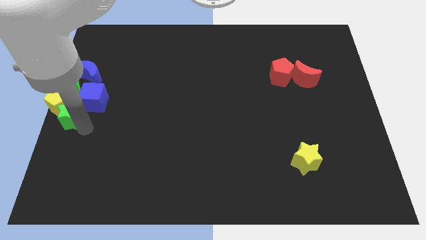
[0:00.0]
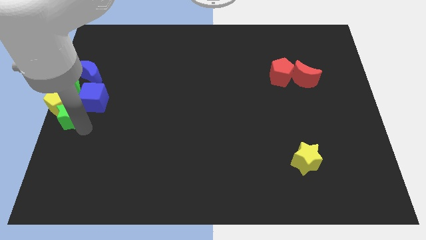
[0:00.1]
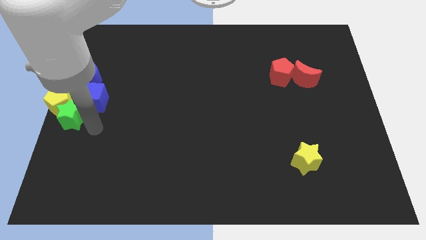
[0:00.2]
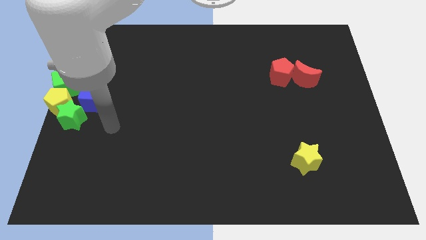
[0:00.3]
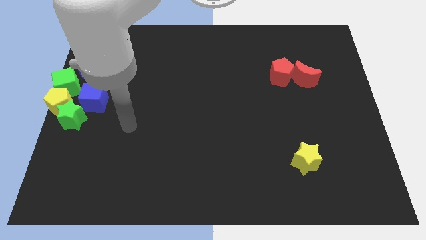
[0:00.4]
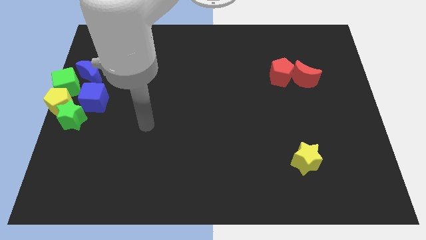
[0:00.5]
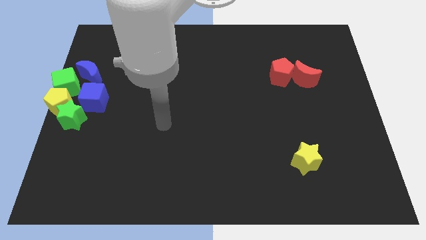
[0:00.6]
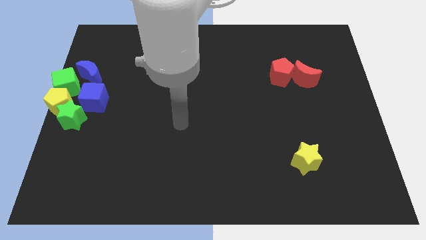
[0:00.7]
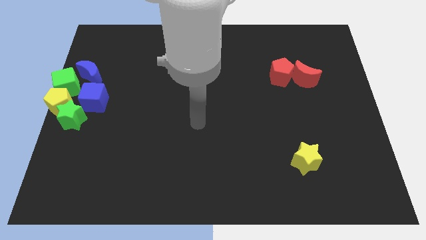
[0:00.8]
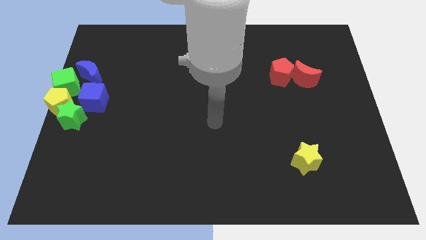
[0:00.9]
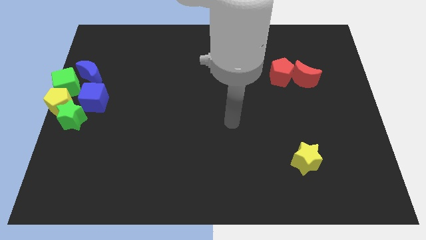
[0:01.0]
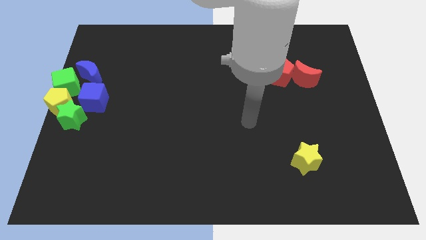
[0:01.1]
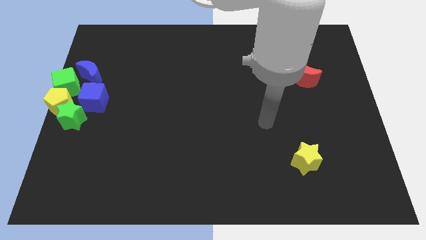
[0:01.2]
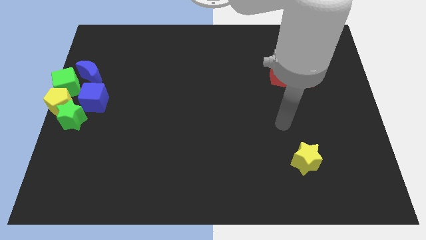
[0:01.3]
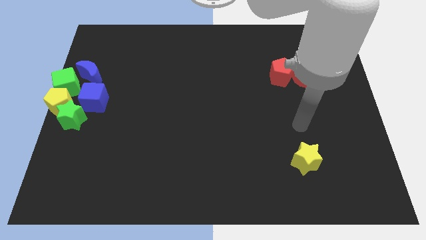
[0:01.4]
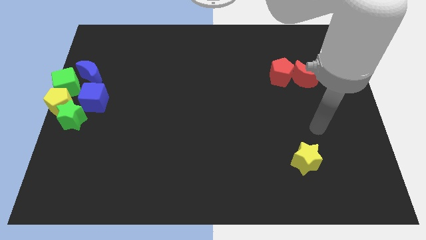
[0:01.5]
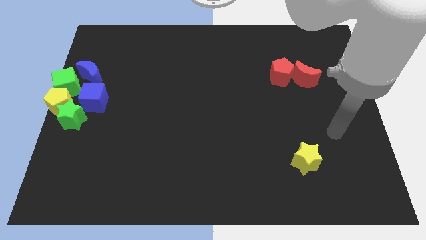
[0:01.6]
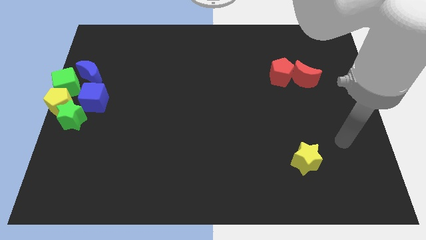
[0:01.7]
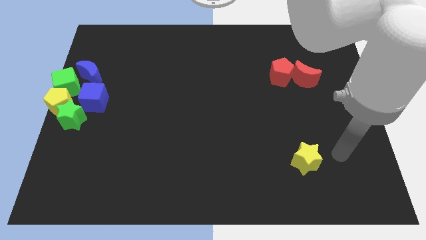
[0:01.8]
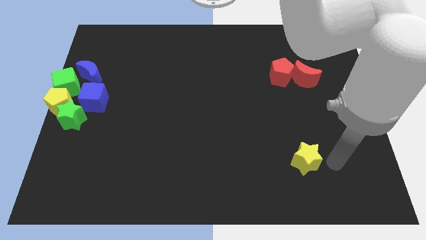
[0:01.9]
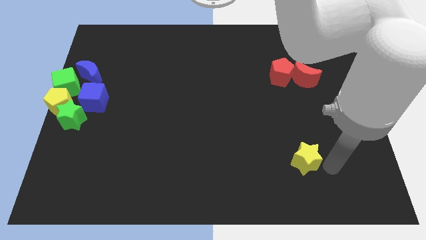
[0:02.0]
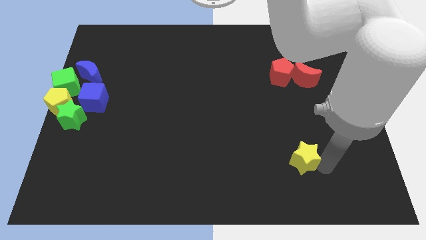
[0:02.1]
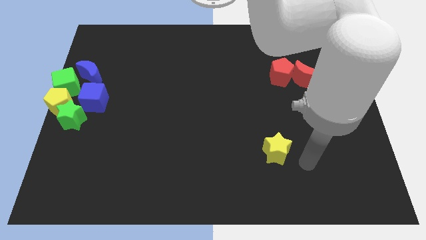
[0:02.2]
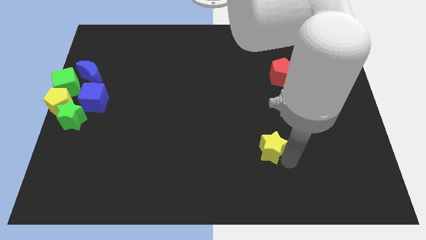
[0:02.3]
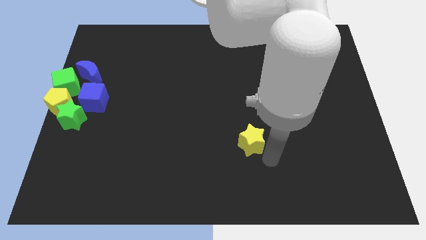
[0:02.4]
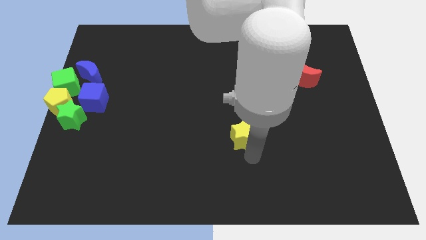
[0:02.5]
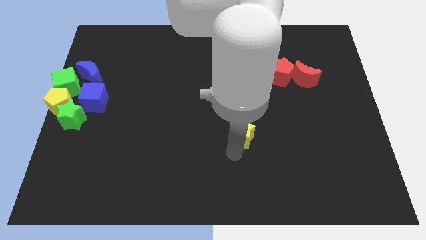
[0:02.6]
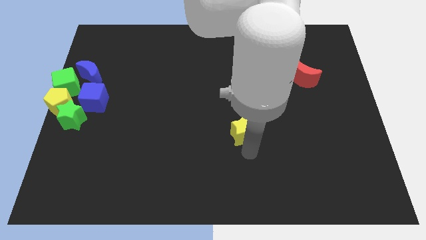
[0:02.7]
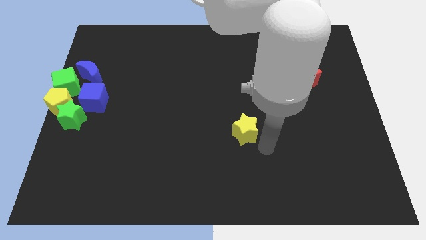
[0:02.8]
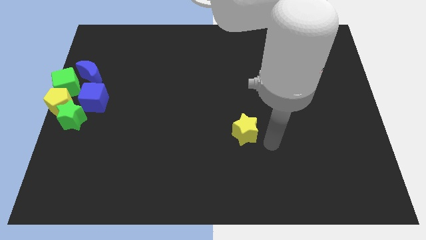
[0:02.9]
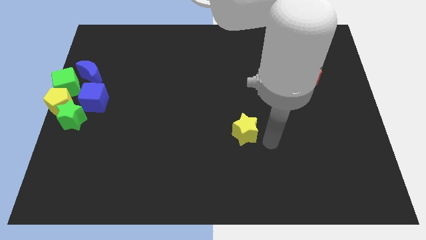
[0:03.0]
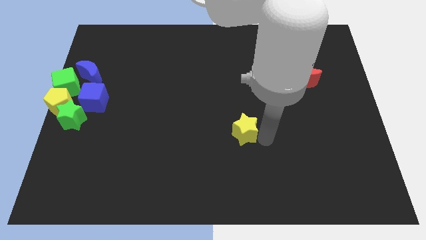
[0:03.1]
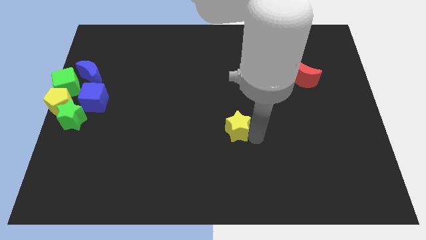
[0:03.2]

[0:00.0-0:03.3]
place the yellow star diagonally to the red pentagon

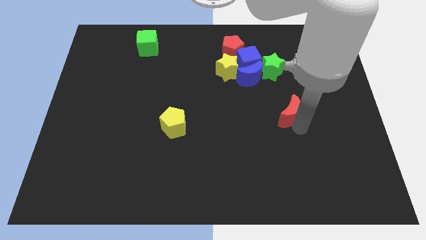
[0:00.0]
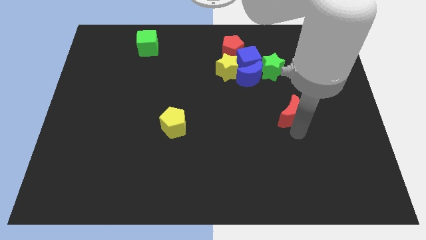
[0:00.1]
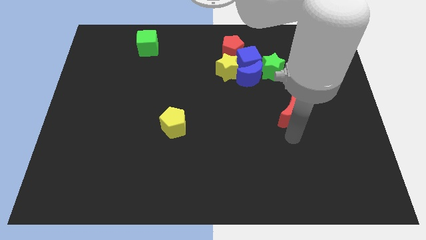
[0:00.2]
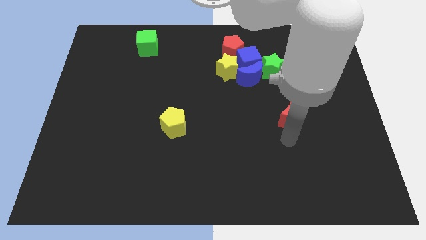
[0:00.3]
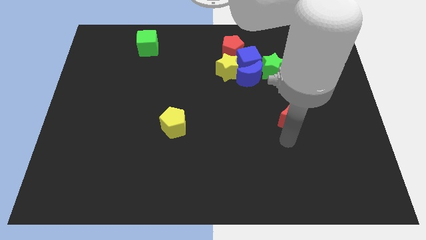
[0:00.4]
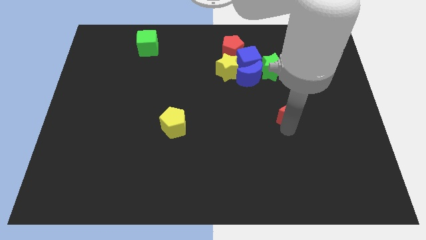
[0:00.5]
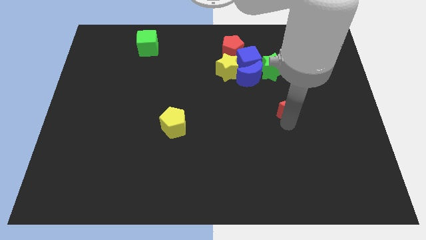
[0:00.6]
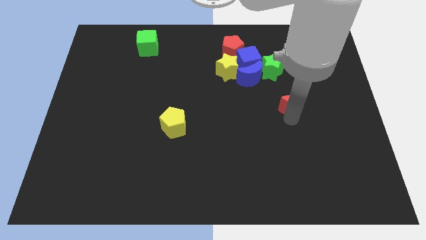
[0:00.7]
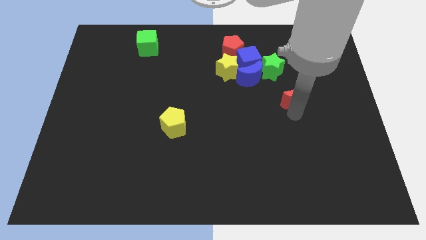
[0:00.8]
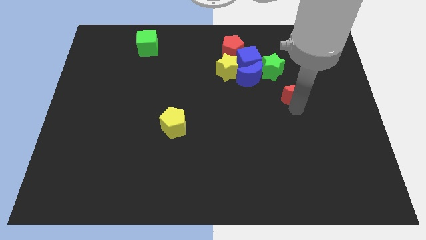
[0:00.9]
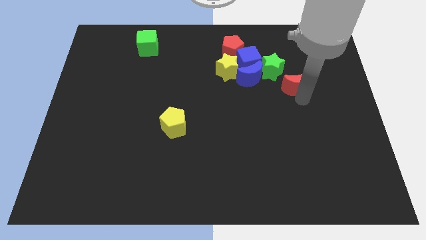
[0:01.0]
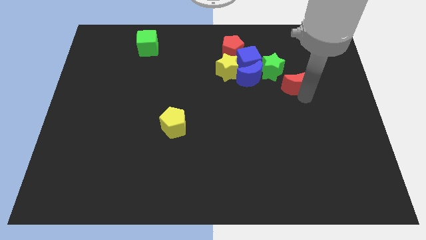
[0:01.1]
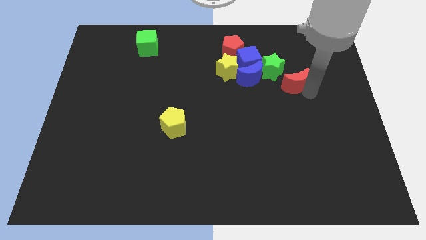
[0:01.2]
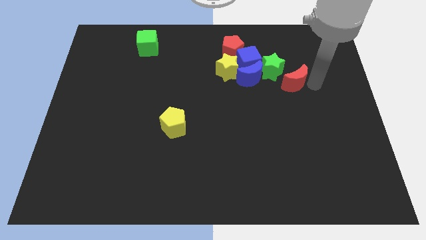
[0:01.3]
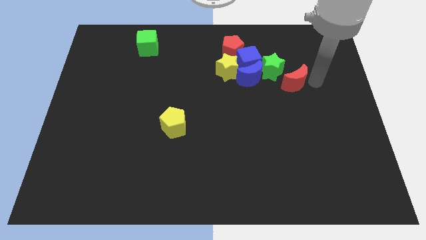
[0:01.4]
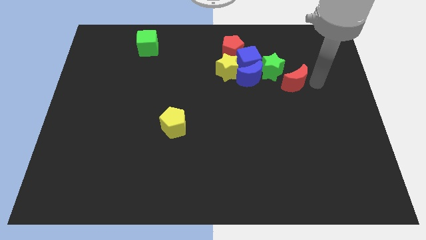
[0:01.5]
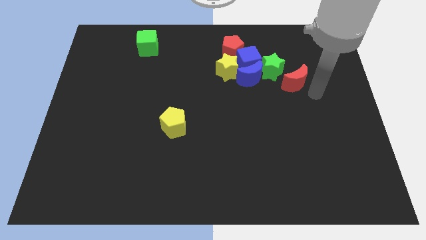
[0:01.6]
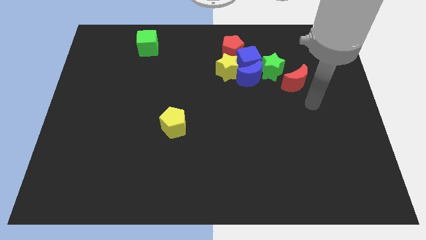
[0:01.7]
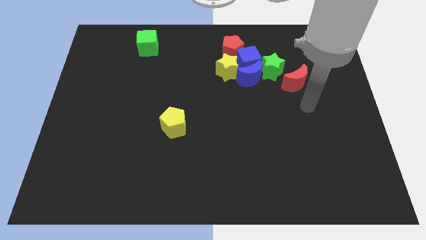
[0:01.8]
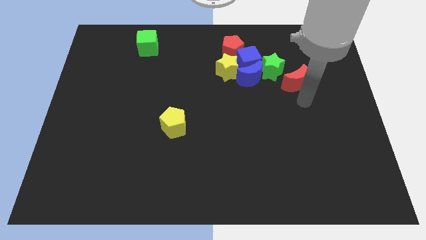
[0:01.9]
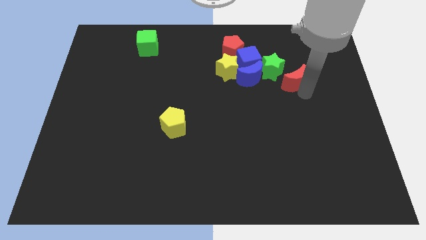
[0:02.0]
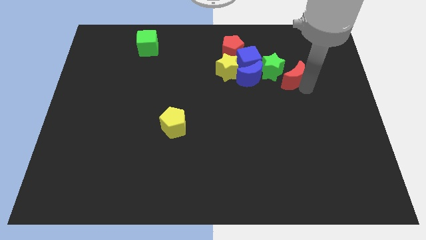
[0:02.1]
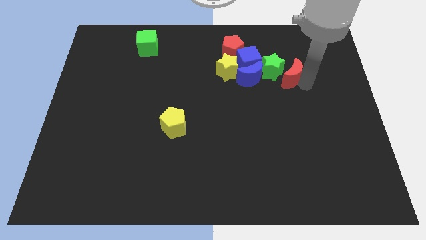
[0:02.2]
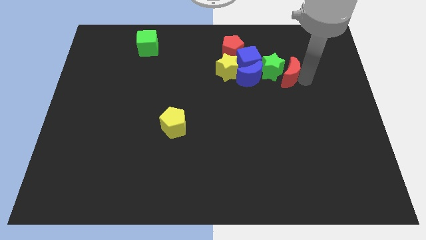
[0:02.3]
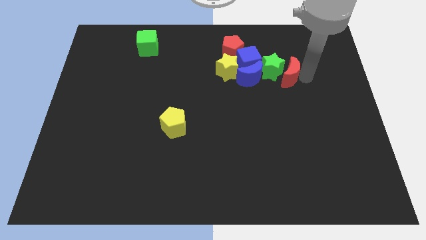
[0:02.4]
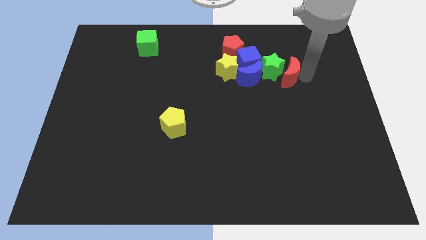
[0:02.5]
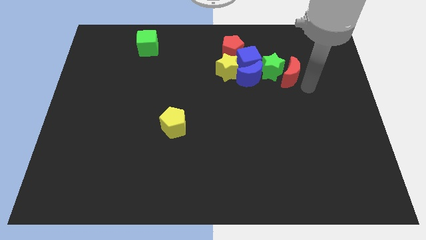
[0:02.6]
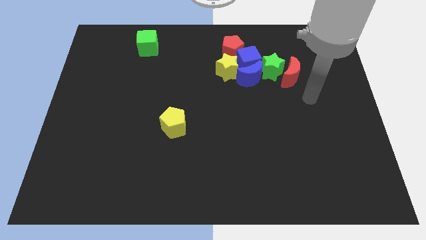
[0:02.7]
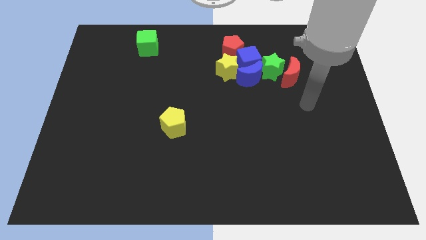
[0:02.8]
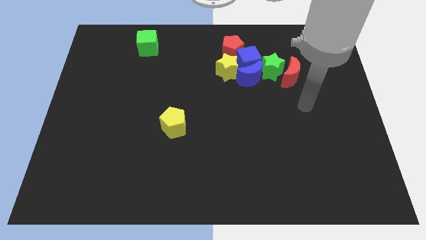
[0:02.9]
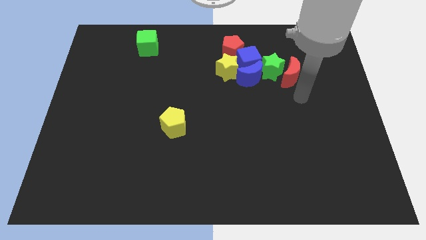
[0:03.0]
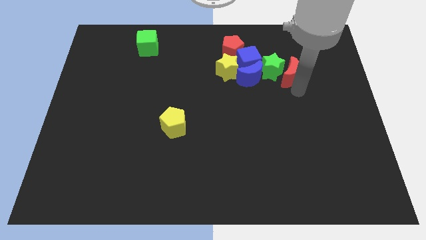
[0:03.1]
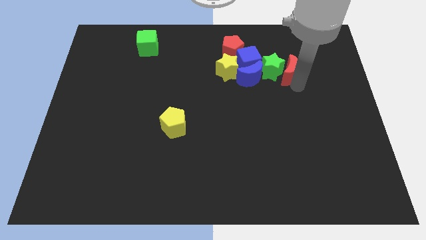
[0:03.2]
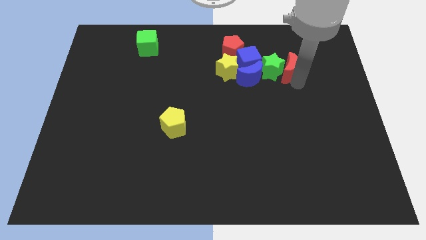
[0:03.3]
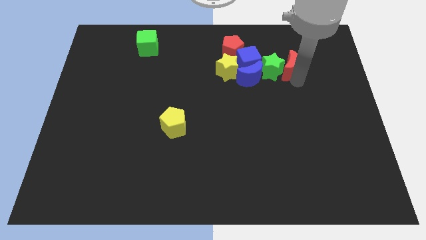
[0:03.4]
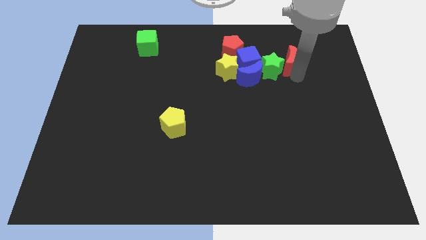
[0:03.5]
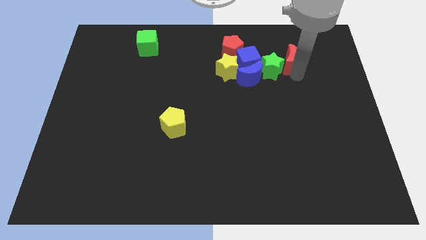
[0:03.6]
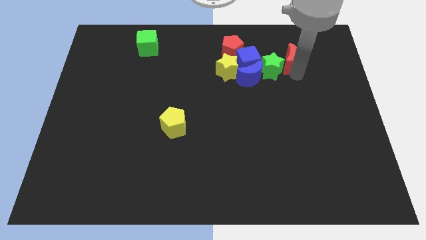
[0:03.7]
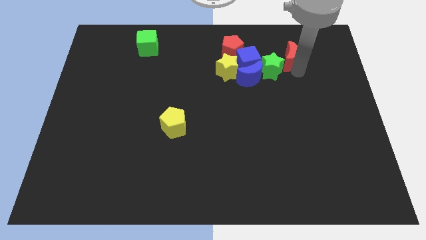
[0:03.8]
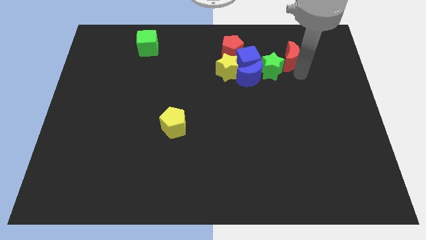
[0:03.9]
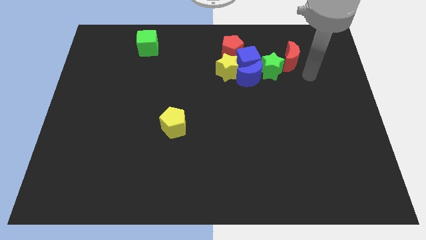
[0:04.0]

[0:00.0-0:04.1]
slide red moon to the top right of green star

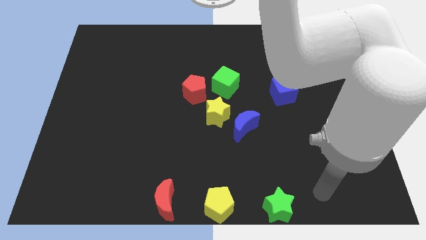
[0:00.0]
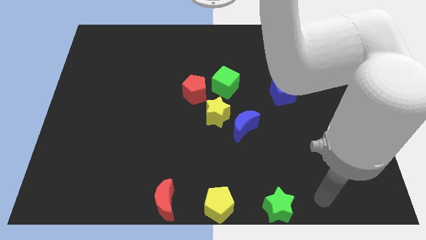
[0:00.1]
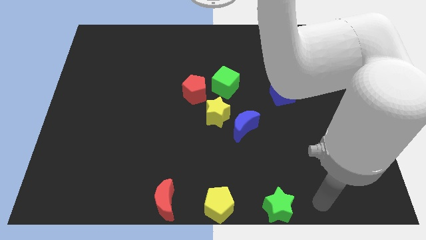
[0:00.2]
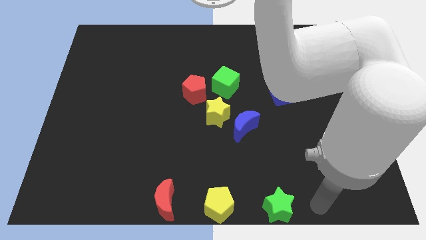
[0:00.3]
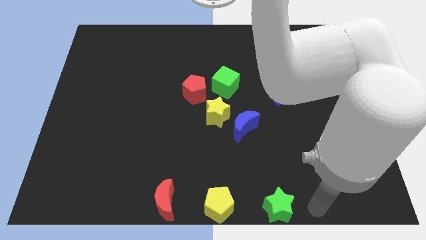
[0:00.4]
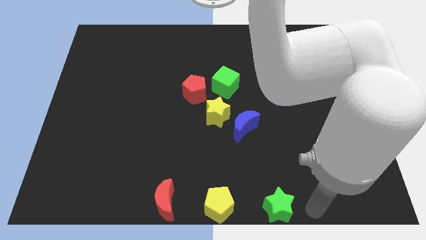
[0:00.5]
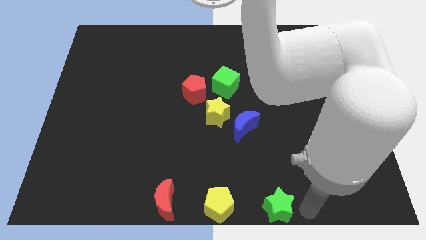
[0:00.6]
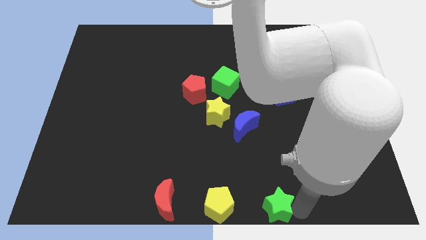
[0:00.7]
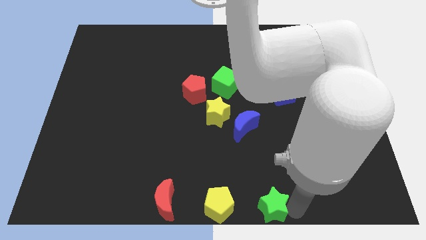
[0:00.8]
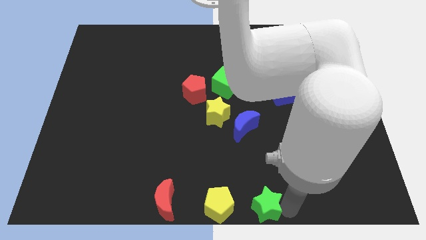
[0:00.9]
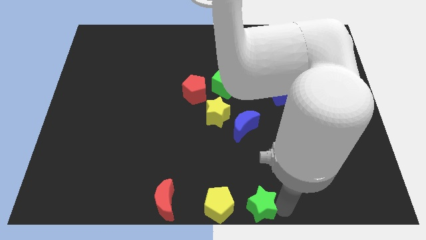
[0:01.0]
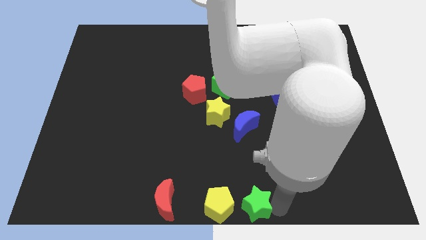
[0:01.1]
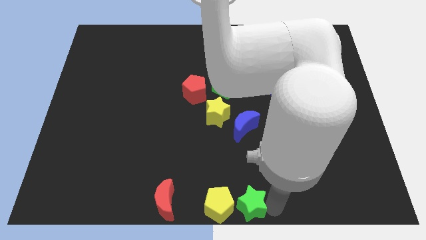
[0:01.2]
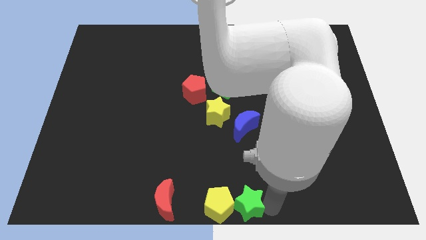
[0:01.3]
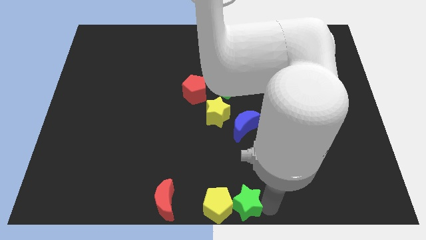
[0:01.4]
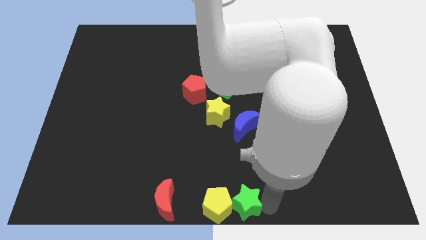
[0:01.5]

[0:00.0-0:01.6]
push the green star in to the yellow pentagon
